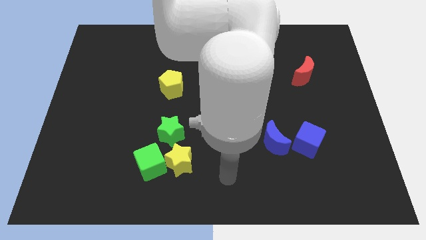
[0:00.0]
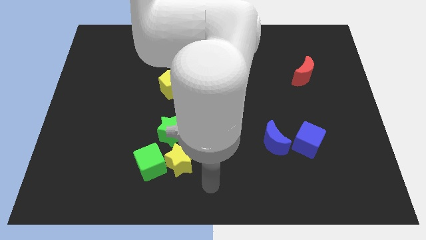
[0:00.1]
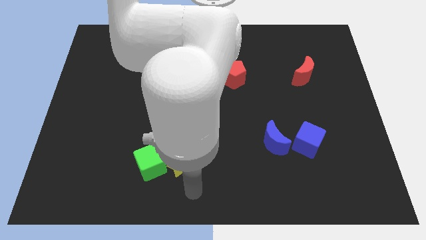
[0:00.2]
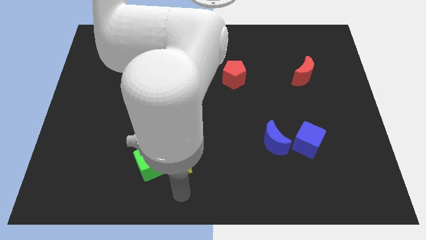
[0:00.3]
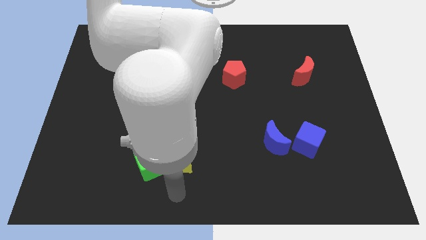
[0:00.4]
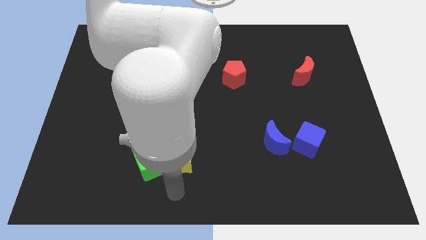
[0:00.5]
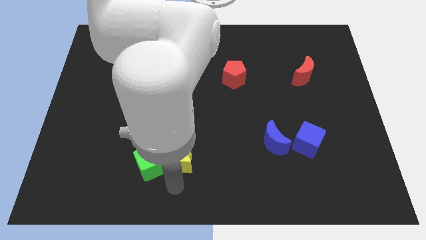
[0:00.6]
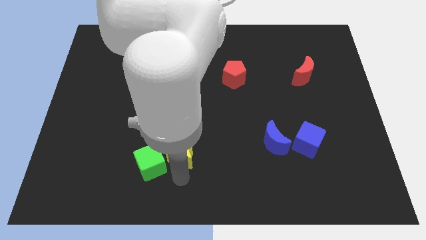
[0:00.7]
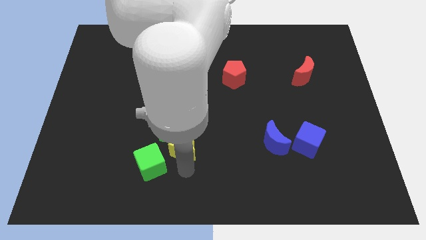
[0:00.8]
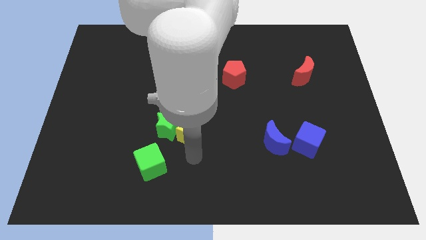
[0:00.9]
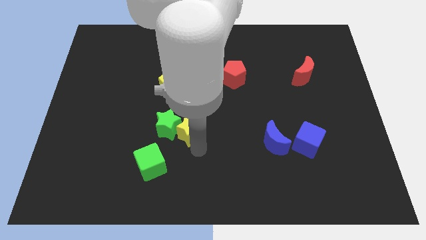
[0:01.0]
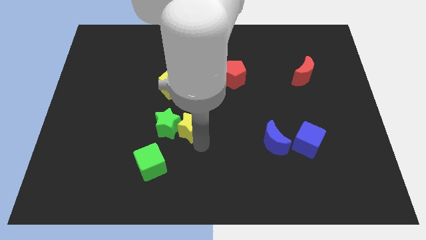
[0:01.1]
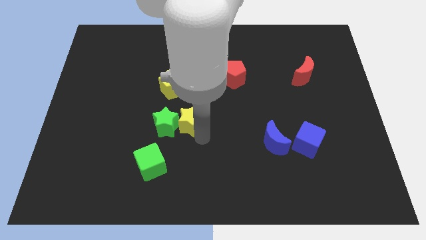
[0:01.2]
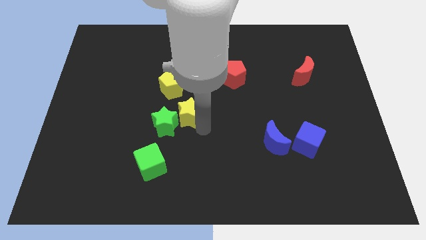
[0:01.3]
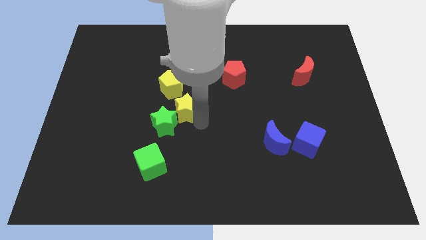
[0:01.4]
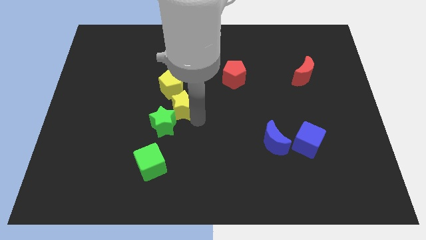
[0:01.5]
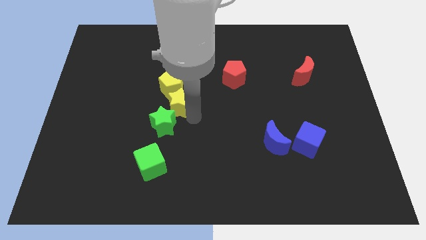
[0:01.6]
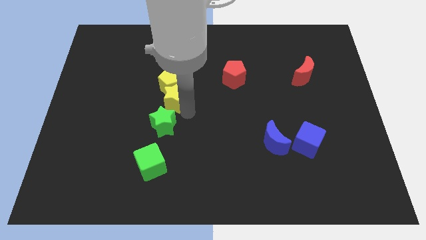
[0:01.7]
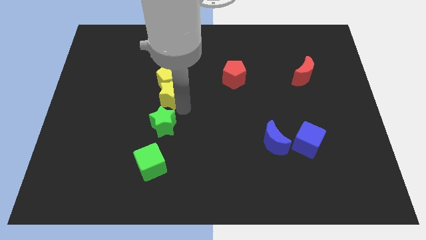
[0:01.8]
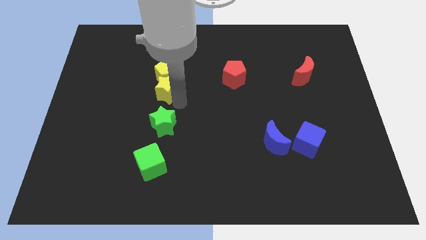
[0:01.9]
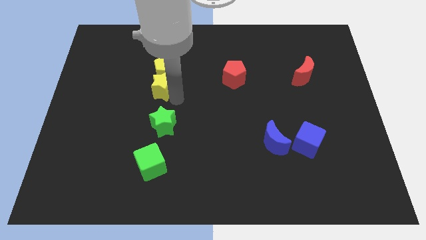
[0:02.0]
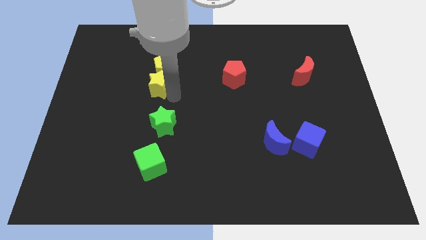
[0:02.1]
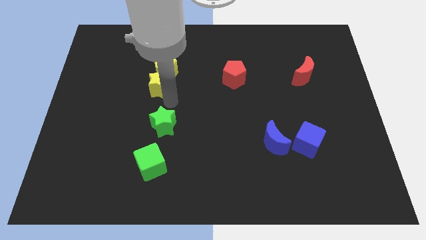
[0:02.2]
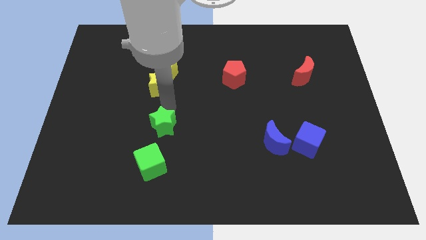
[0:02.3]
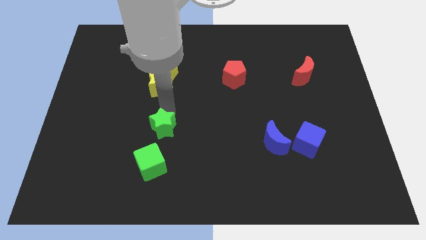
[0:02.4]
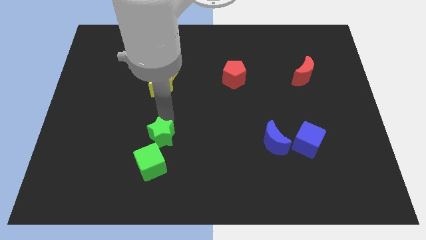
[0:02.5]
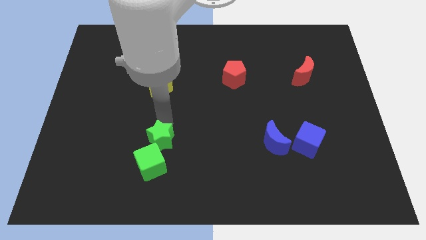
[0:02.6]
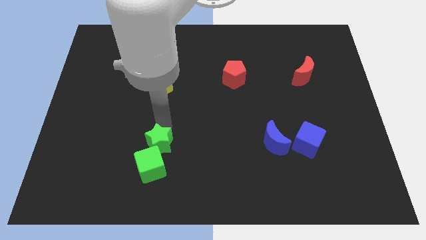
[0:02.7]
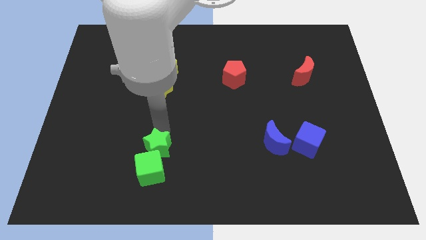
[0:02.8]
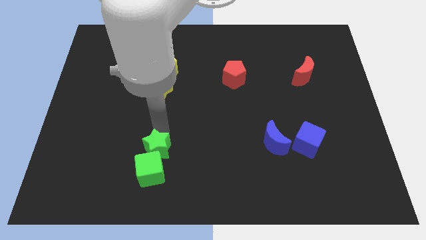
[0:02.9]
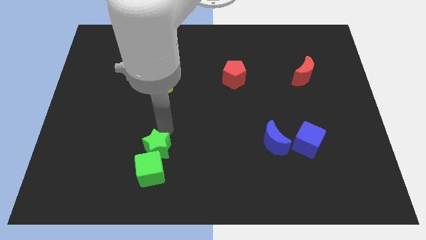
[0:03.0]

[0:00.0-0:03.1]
push green star slightly towards down

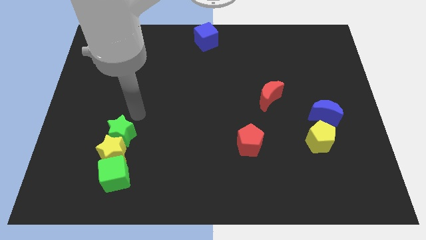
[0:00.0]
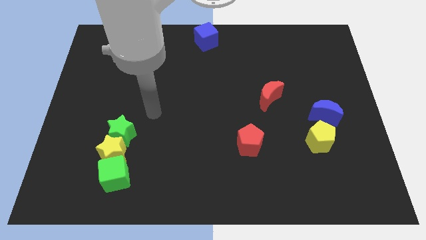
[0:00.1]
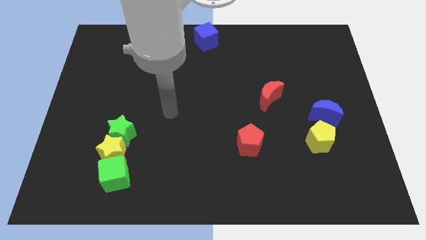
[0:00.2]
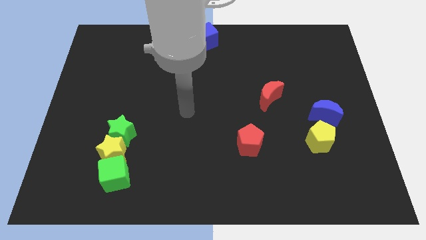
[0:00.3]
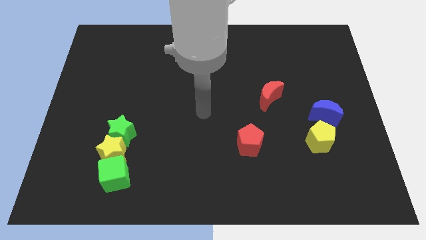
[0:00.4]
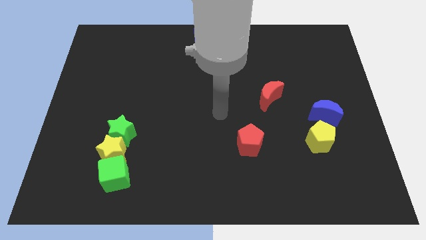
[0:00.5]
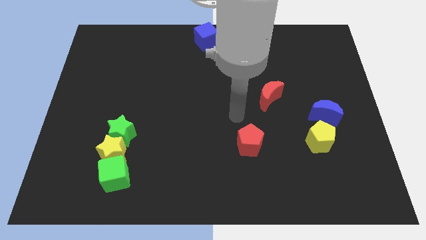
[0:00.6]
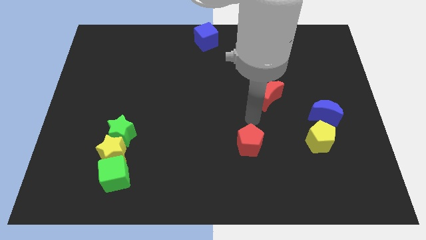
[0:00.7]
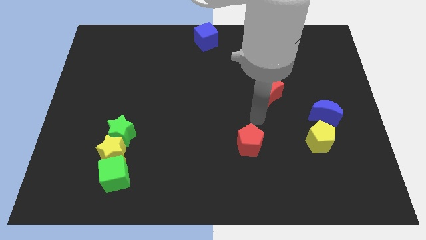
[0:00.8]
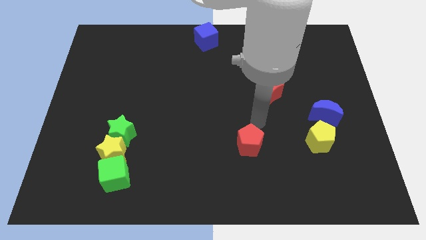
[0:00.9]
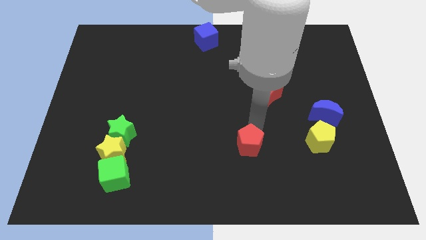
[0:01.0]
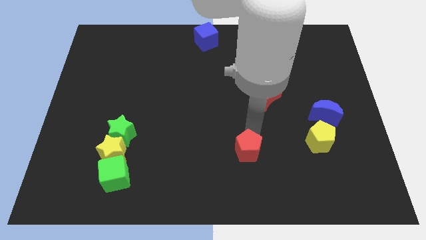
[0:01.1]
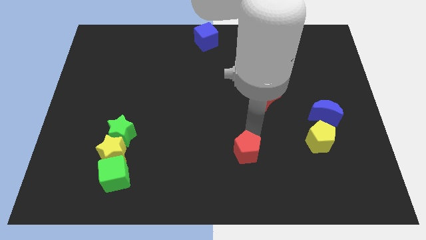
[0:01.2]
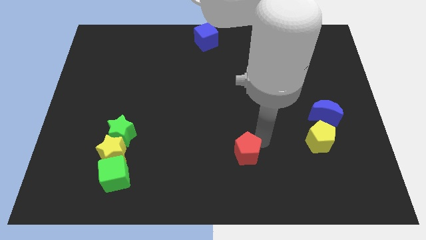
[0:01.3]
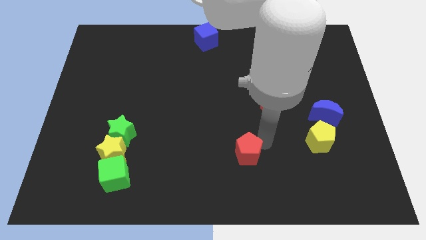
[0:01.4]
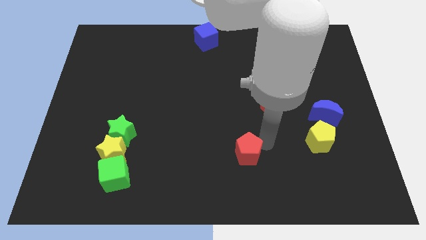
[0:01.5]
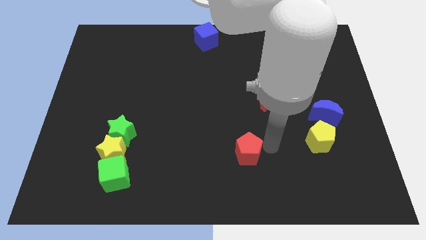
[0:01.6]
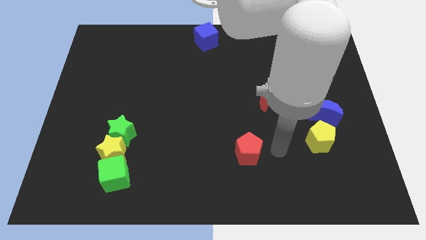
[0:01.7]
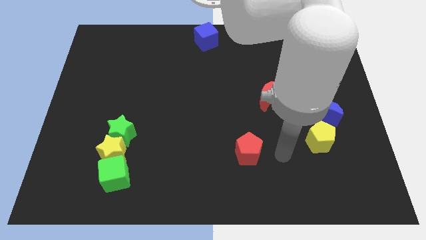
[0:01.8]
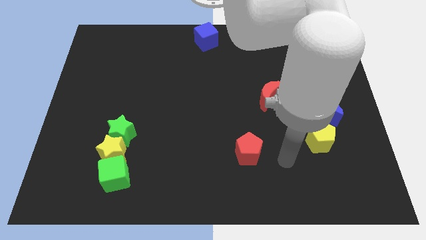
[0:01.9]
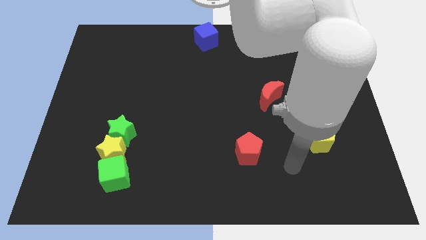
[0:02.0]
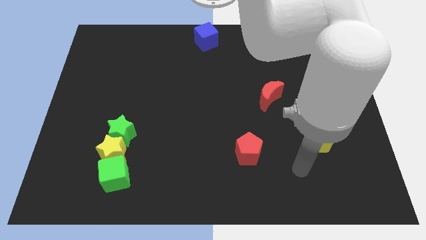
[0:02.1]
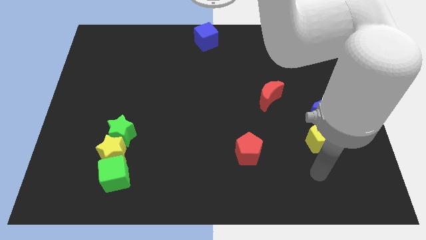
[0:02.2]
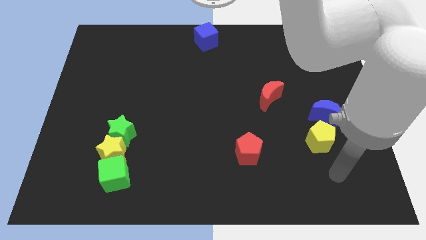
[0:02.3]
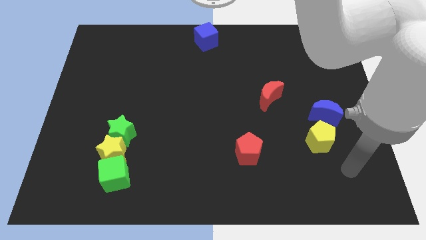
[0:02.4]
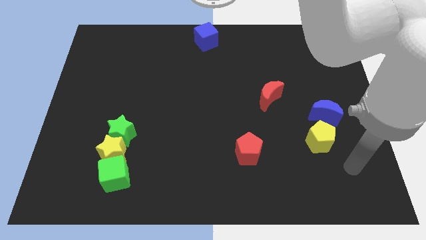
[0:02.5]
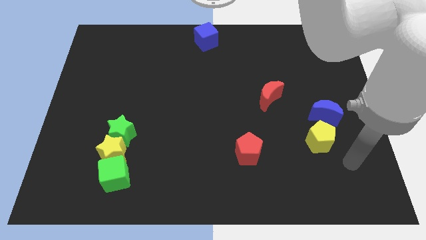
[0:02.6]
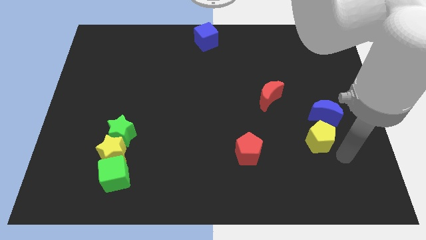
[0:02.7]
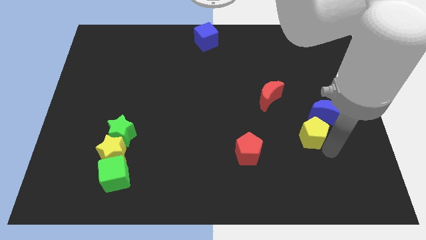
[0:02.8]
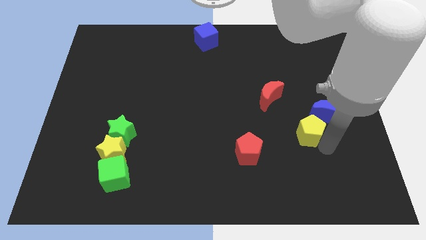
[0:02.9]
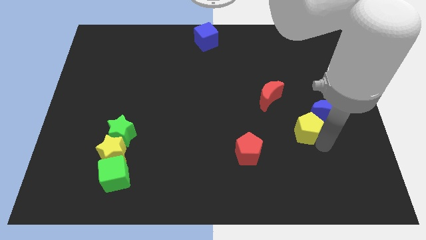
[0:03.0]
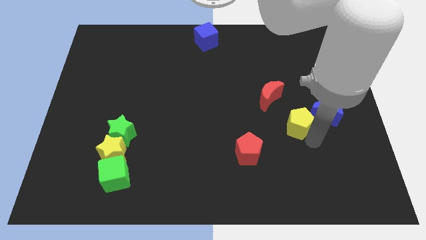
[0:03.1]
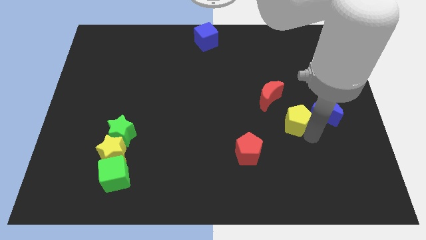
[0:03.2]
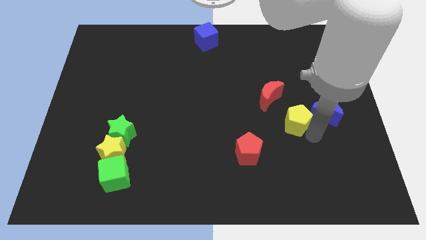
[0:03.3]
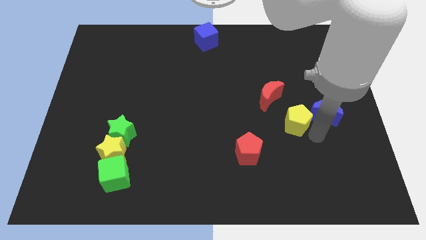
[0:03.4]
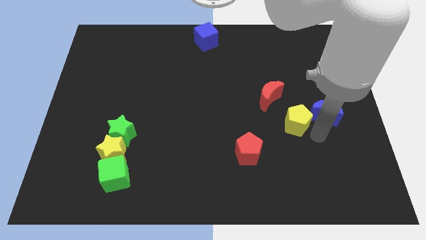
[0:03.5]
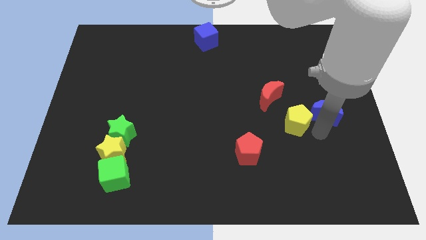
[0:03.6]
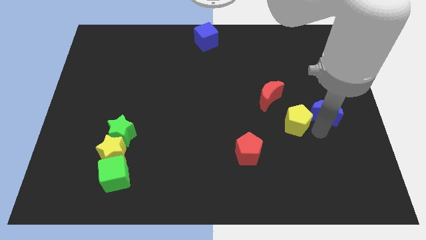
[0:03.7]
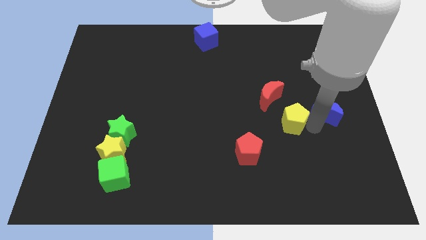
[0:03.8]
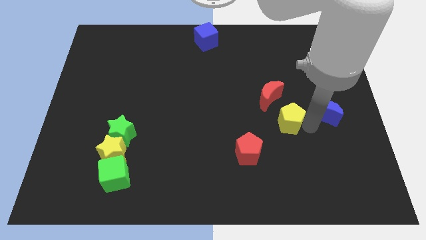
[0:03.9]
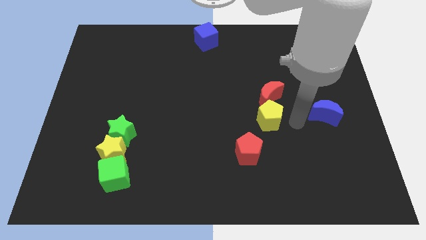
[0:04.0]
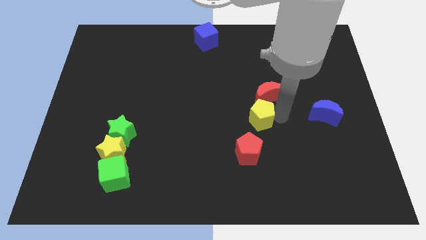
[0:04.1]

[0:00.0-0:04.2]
place the yellow pentagon in between the red moon and red pentagon

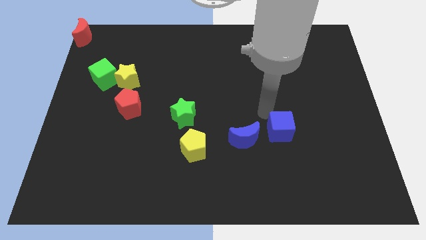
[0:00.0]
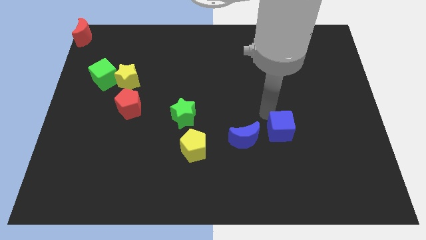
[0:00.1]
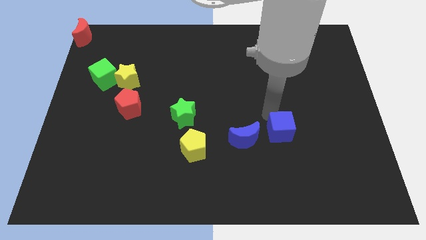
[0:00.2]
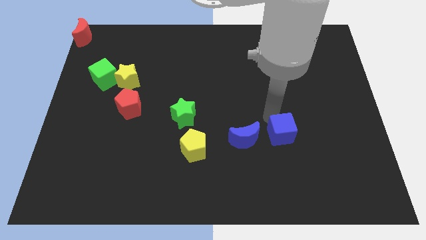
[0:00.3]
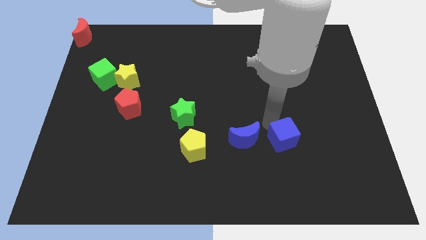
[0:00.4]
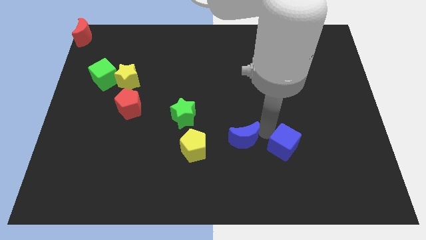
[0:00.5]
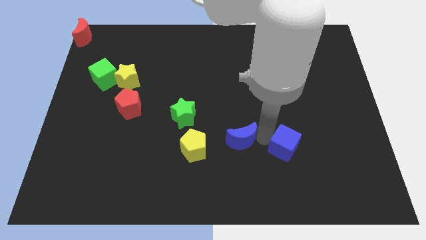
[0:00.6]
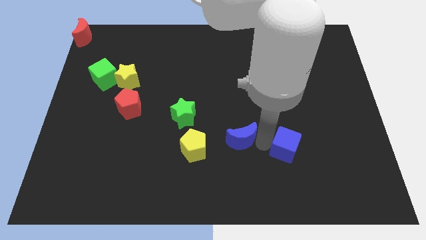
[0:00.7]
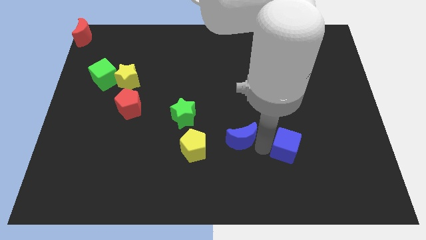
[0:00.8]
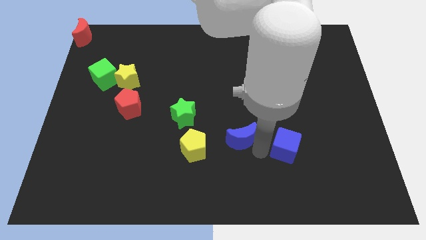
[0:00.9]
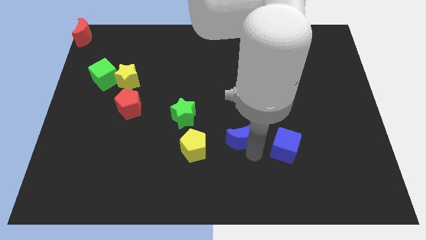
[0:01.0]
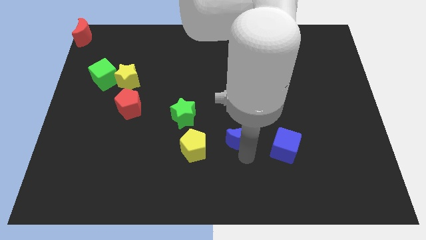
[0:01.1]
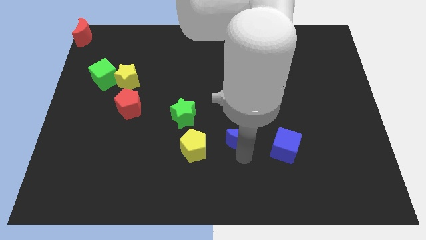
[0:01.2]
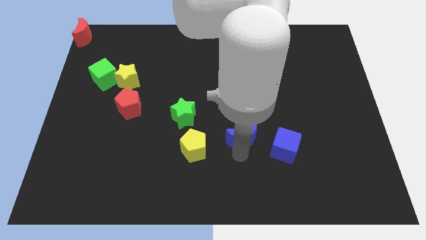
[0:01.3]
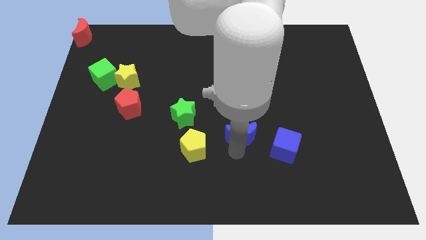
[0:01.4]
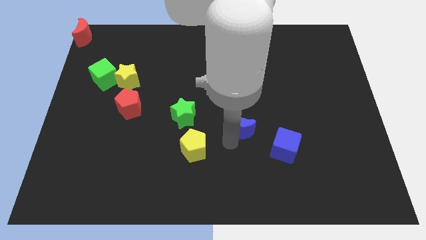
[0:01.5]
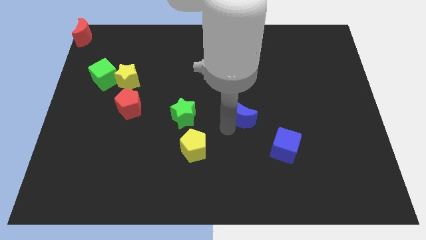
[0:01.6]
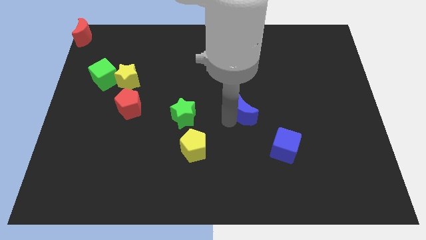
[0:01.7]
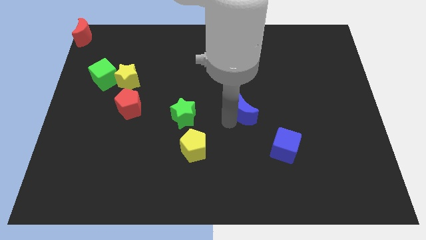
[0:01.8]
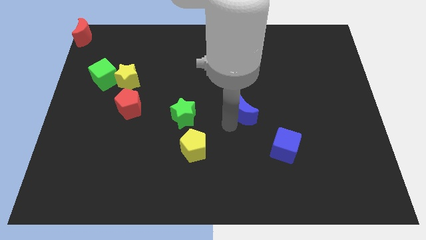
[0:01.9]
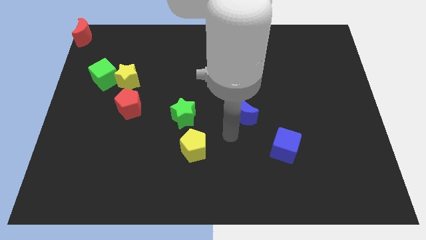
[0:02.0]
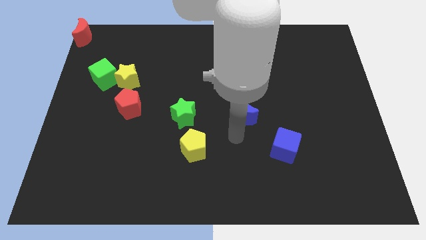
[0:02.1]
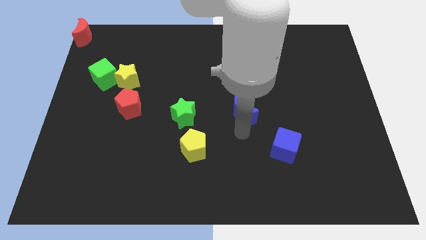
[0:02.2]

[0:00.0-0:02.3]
place the blue cube right to the yellow pentagon
